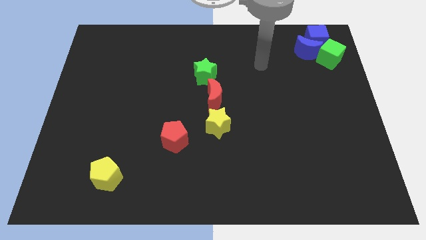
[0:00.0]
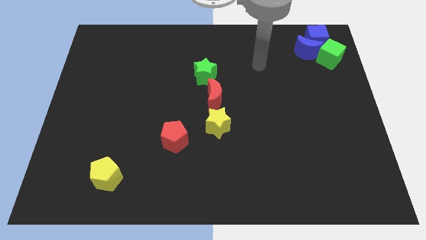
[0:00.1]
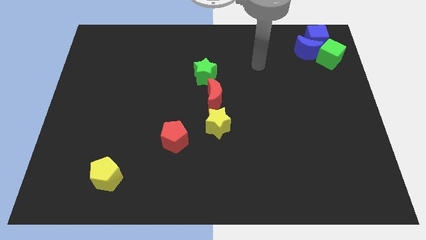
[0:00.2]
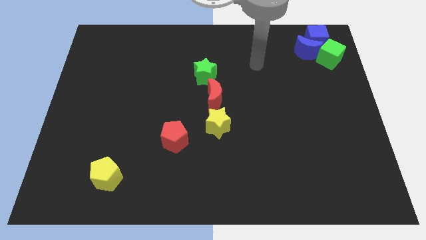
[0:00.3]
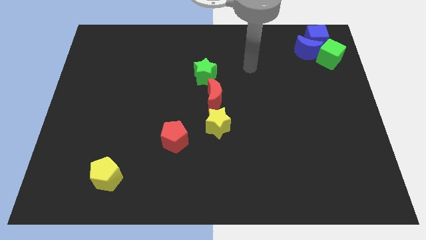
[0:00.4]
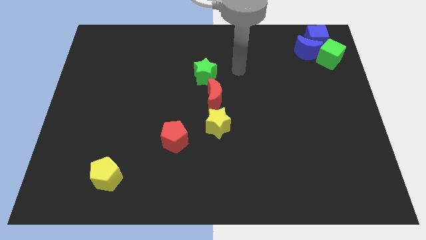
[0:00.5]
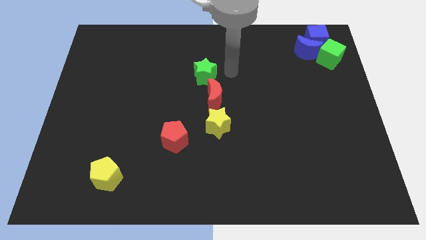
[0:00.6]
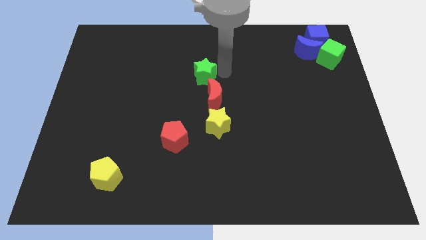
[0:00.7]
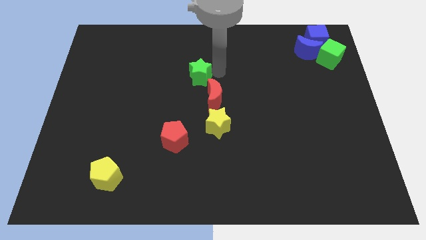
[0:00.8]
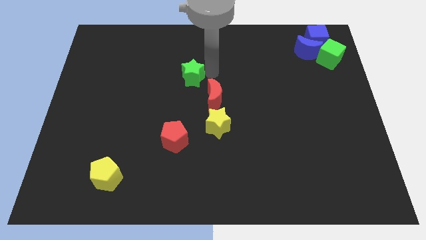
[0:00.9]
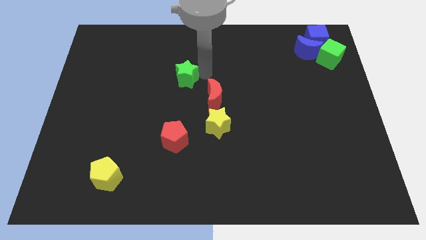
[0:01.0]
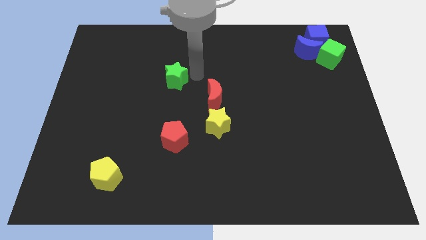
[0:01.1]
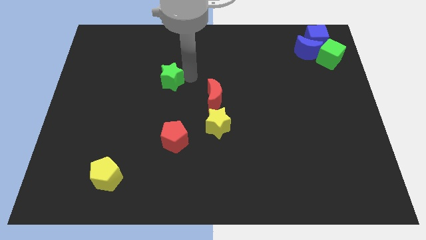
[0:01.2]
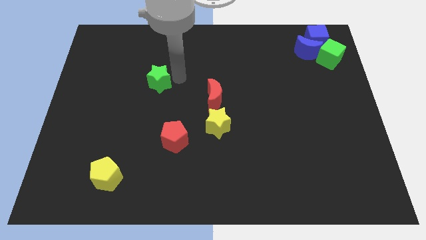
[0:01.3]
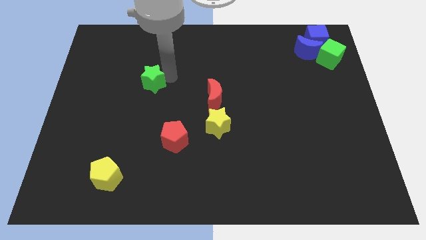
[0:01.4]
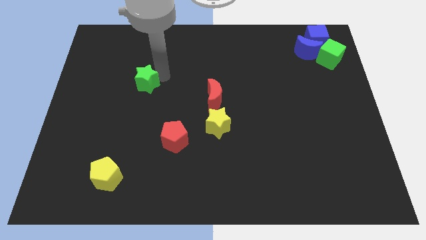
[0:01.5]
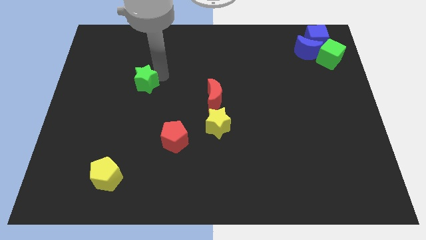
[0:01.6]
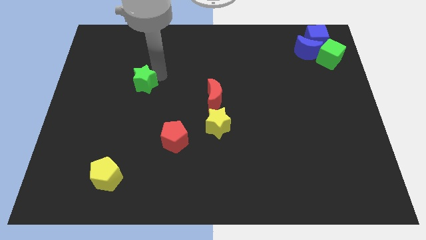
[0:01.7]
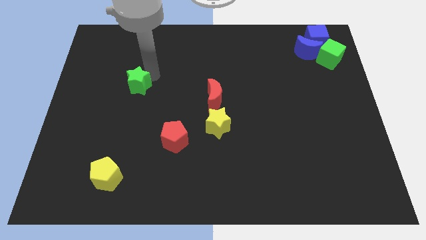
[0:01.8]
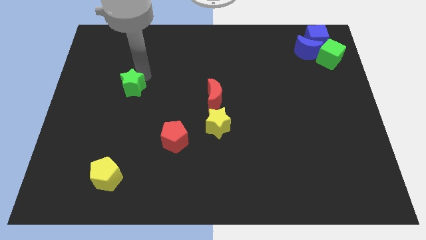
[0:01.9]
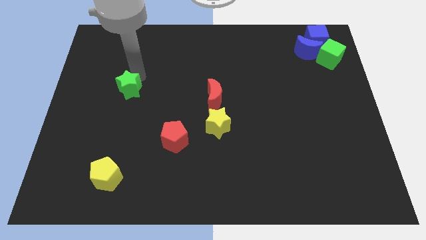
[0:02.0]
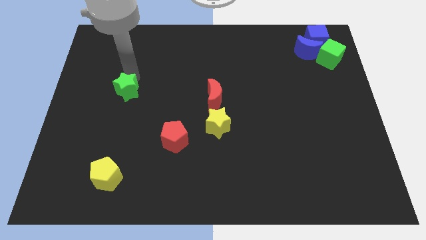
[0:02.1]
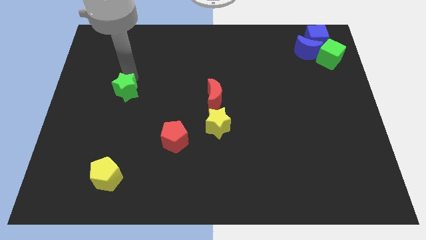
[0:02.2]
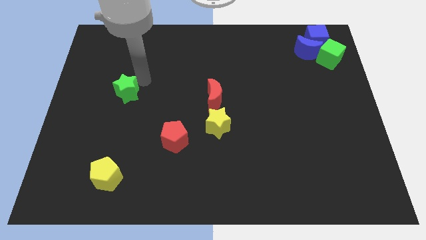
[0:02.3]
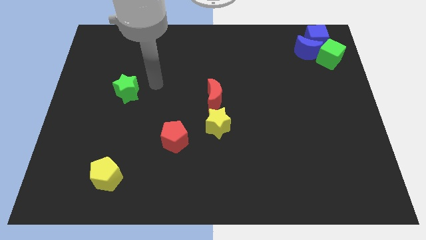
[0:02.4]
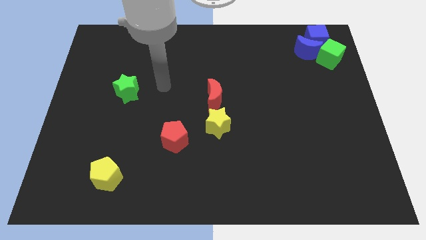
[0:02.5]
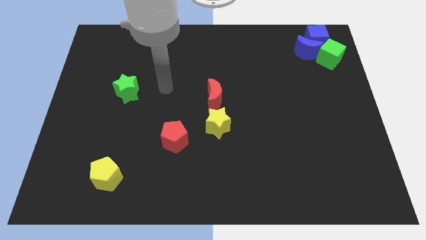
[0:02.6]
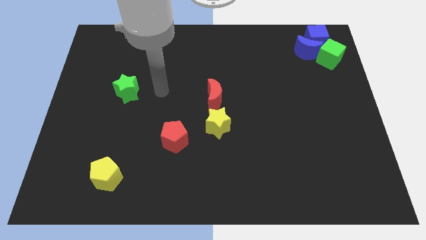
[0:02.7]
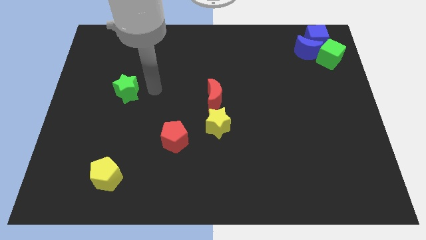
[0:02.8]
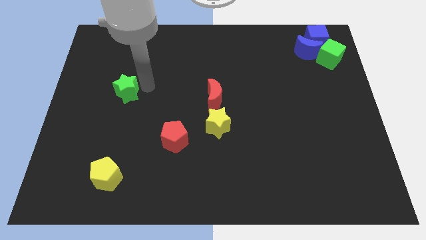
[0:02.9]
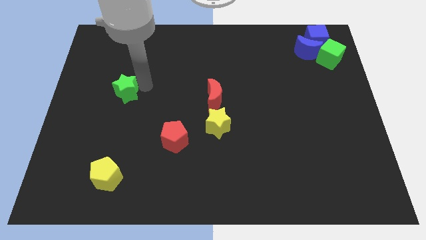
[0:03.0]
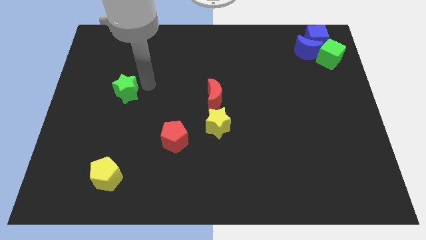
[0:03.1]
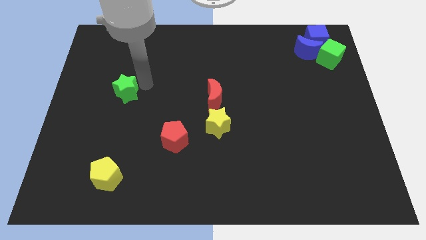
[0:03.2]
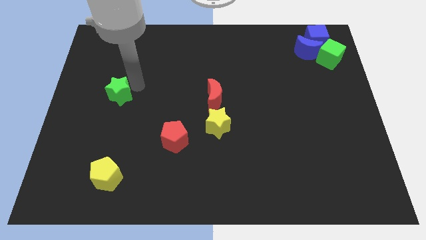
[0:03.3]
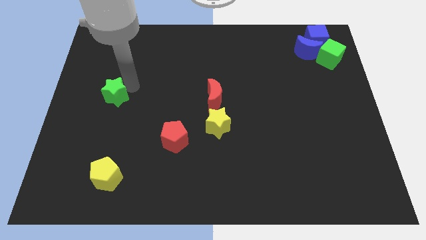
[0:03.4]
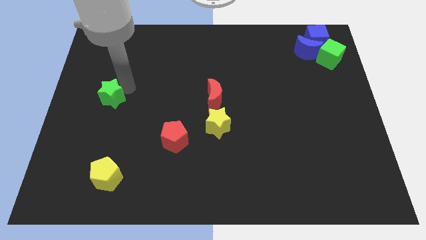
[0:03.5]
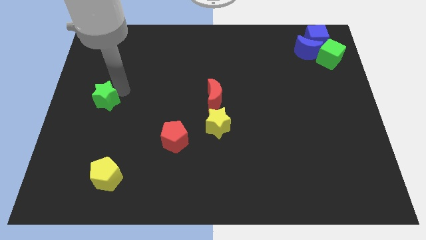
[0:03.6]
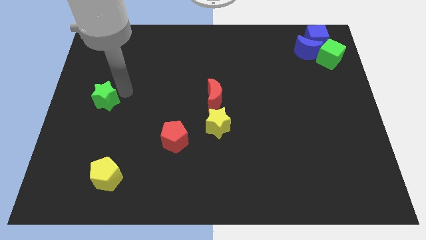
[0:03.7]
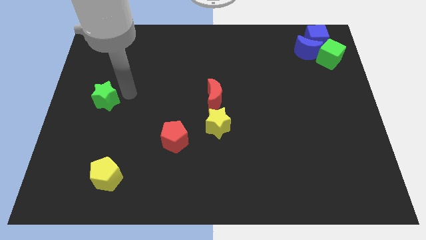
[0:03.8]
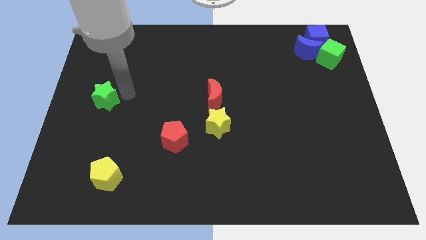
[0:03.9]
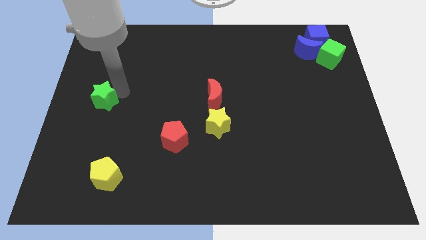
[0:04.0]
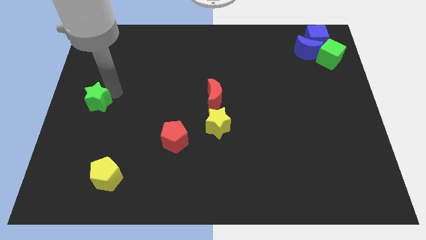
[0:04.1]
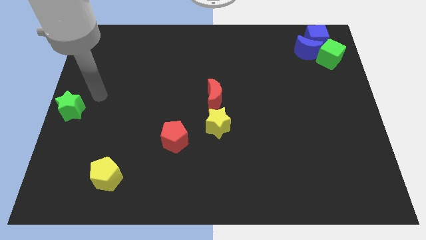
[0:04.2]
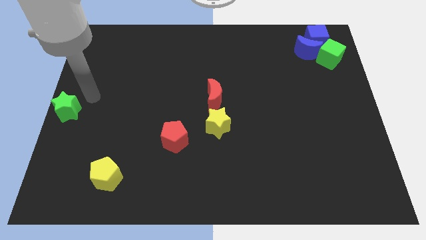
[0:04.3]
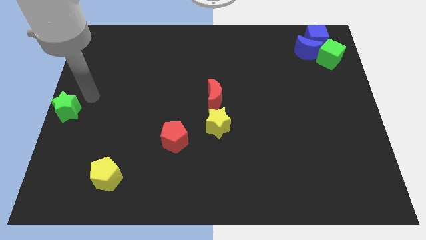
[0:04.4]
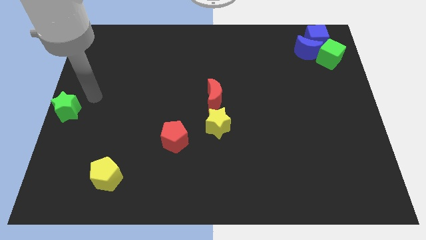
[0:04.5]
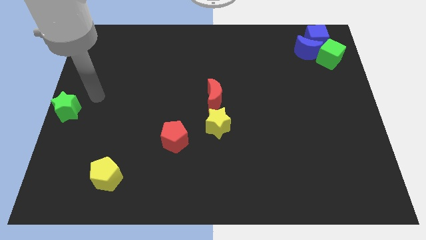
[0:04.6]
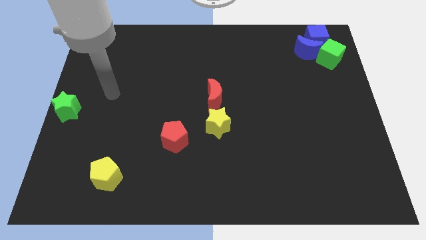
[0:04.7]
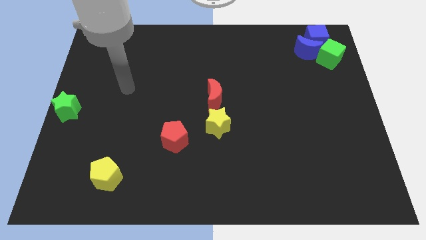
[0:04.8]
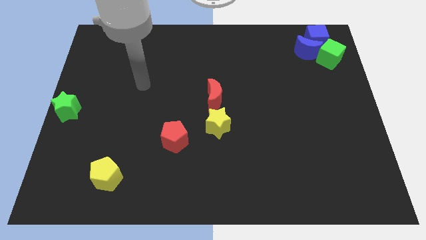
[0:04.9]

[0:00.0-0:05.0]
push the green star to the left center of the board

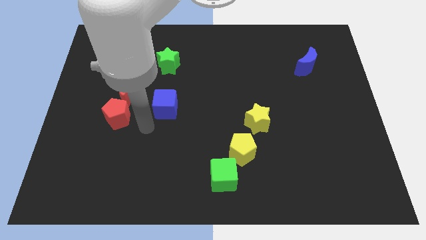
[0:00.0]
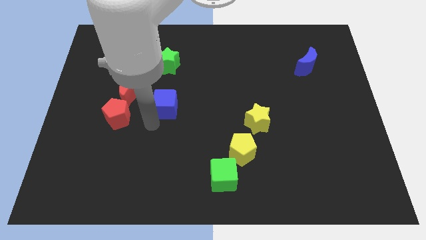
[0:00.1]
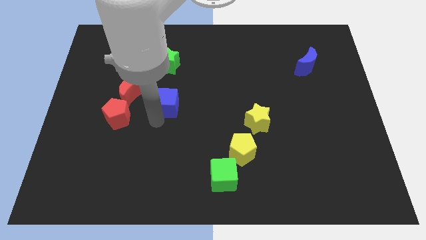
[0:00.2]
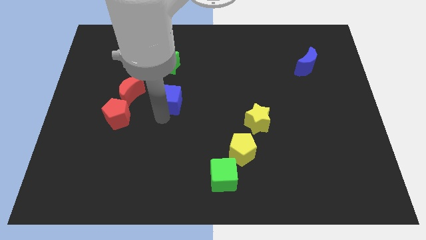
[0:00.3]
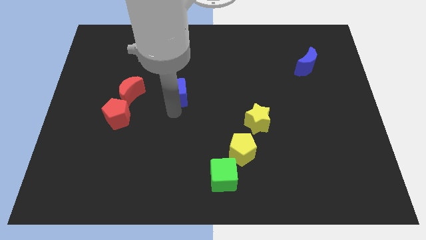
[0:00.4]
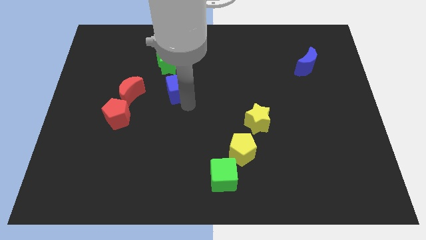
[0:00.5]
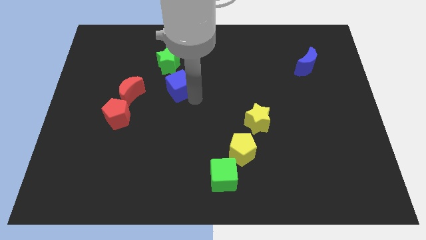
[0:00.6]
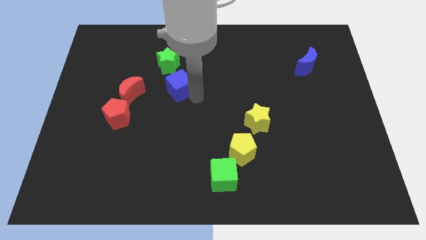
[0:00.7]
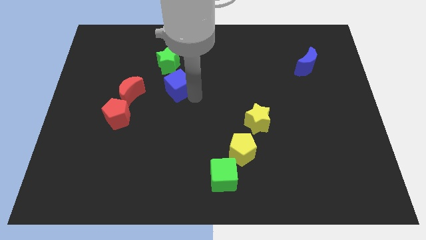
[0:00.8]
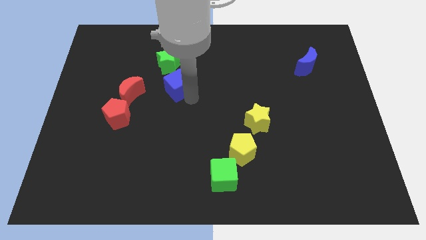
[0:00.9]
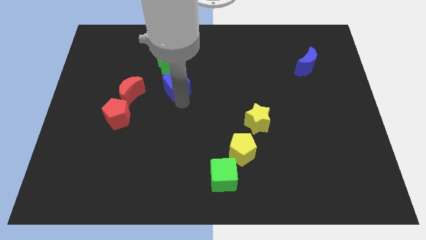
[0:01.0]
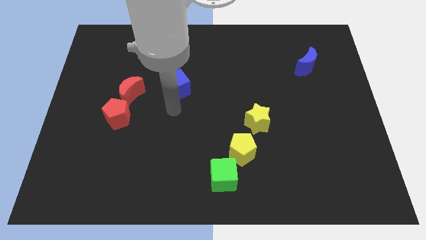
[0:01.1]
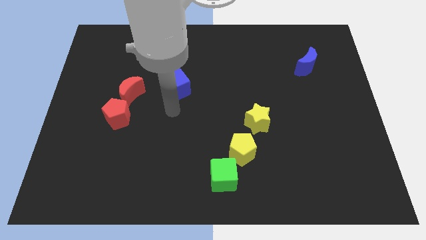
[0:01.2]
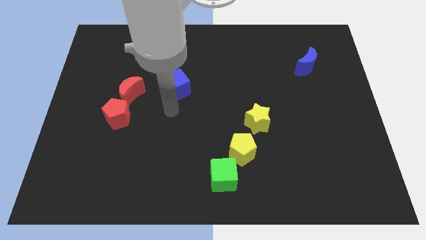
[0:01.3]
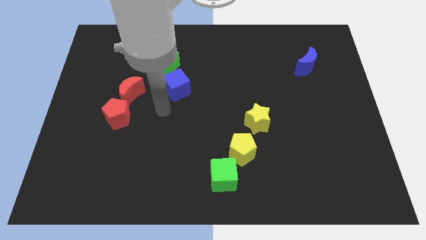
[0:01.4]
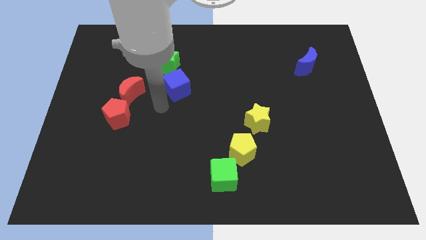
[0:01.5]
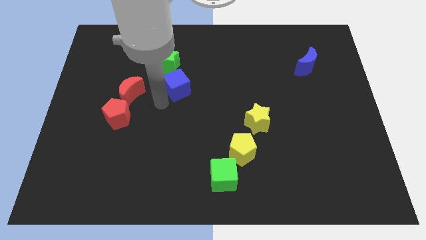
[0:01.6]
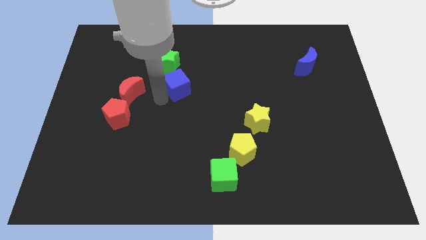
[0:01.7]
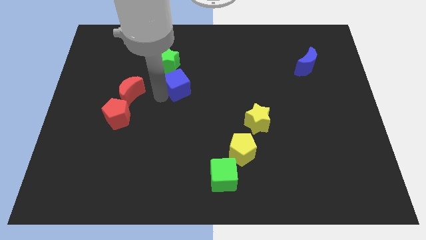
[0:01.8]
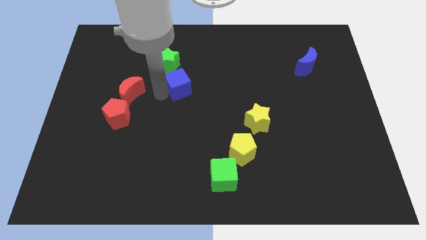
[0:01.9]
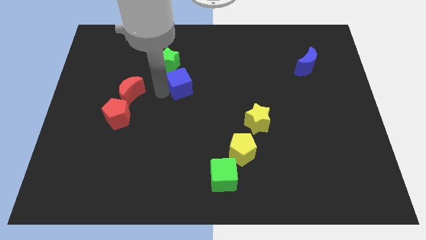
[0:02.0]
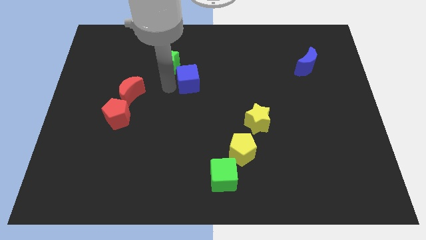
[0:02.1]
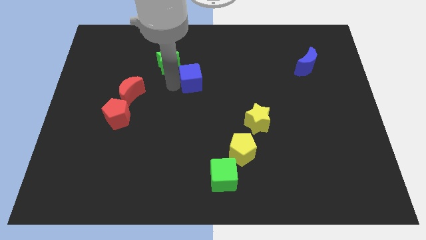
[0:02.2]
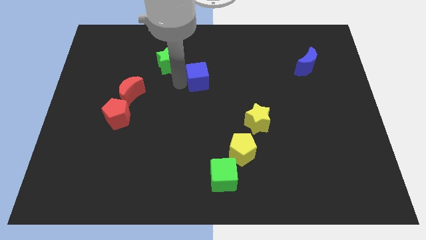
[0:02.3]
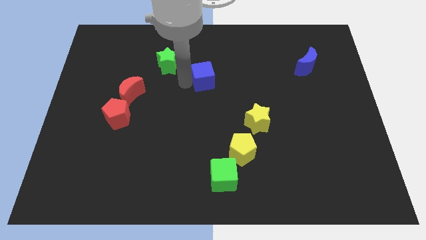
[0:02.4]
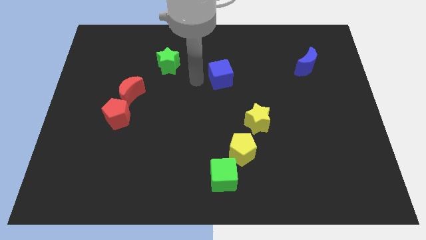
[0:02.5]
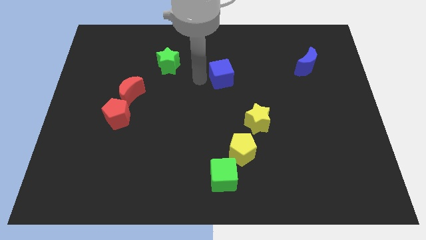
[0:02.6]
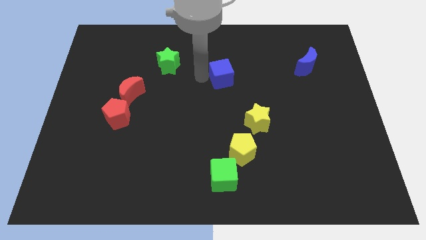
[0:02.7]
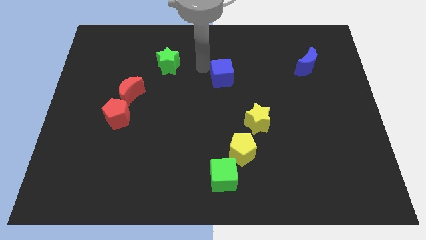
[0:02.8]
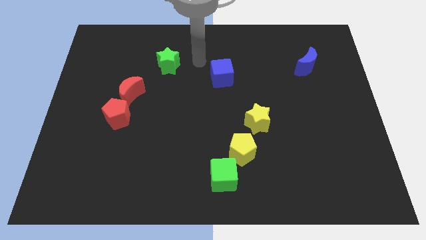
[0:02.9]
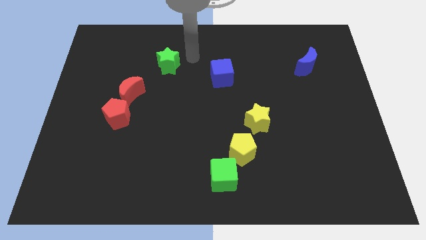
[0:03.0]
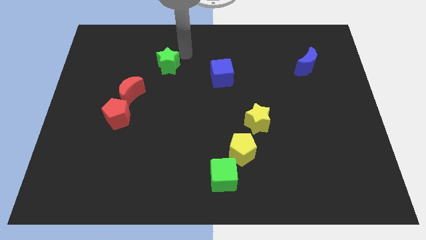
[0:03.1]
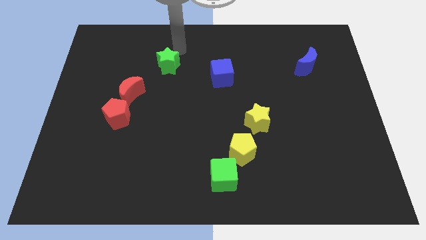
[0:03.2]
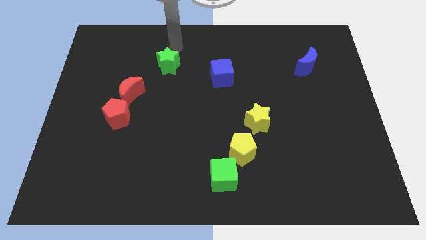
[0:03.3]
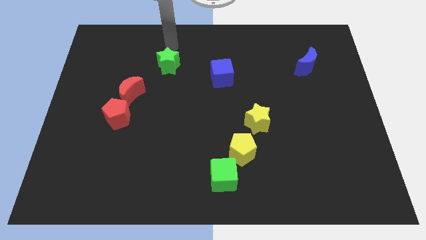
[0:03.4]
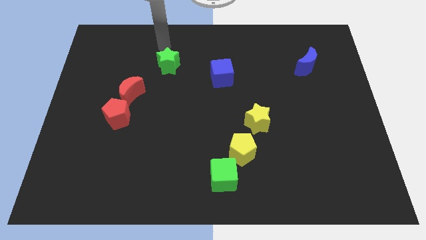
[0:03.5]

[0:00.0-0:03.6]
slide the blue cube diagonally on the bottom right side of the green star

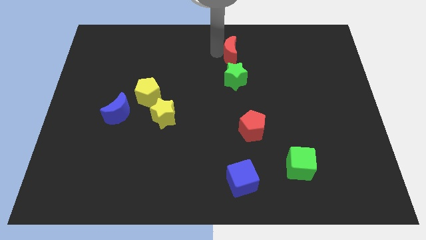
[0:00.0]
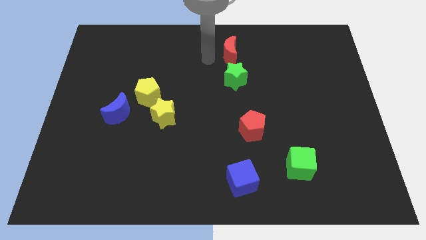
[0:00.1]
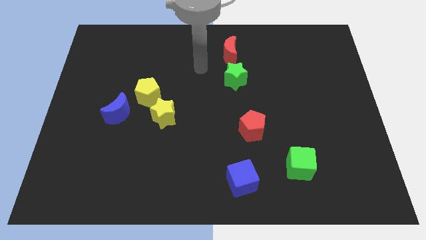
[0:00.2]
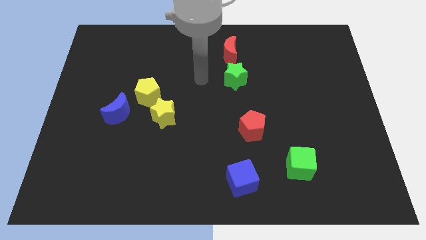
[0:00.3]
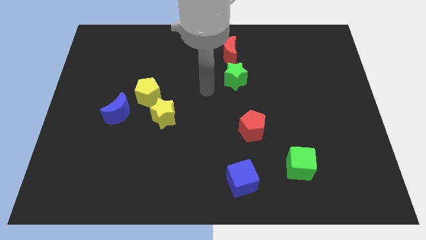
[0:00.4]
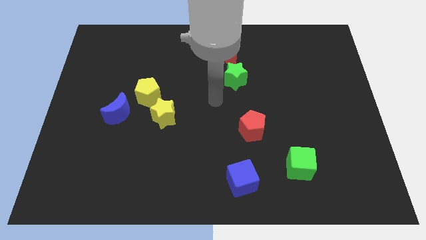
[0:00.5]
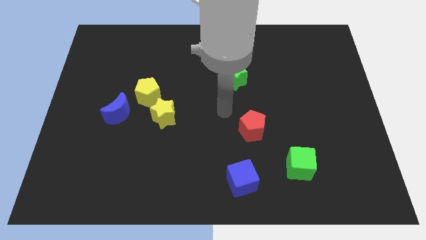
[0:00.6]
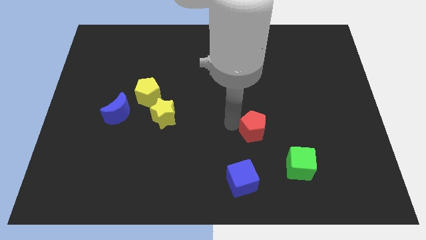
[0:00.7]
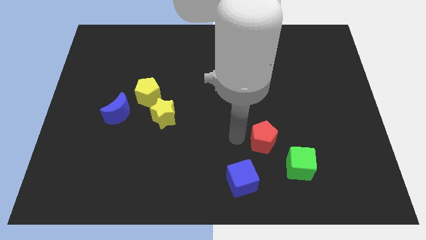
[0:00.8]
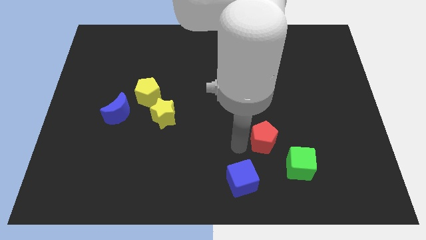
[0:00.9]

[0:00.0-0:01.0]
push the red pentagon to the top right of the blue cube
